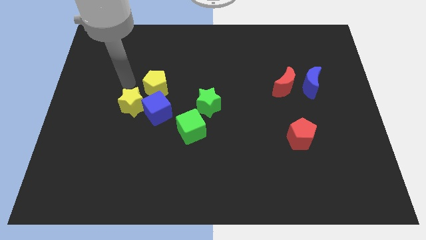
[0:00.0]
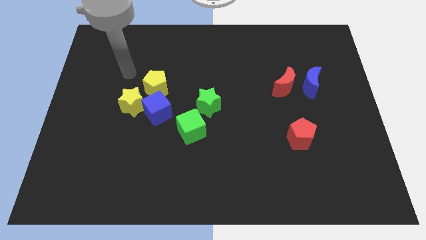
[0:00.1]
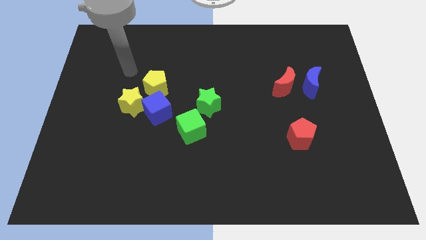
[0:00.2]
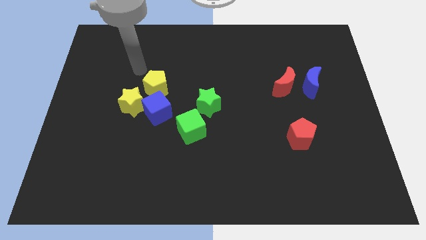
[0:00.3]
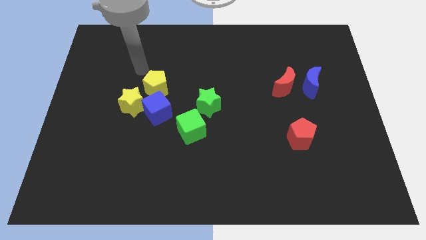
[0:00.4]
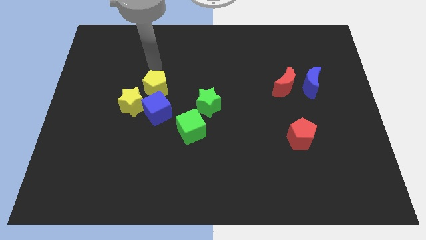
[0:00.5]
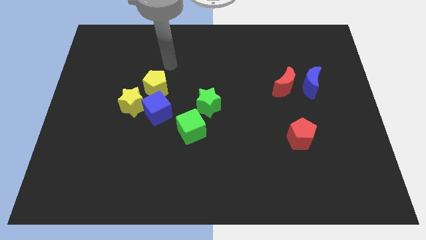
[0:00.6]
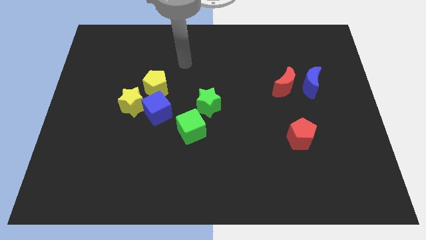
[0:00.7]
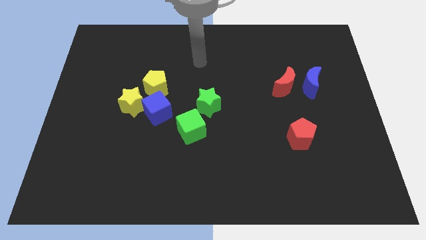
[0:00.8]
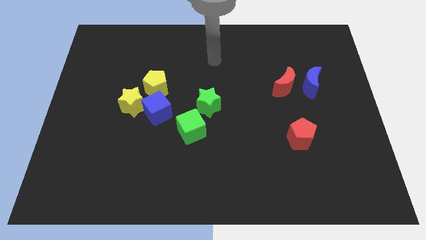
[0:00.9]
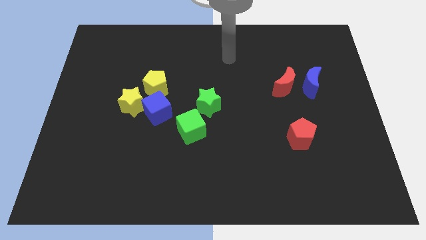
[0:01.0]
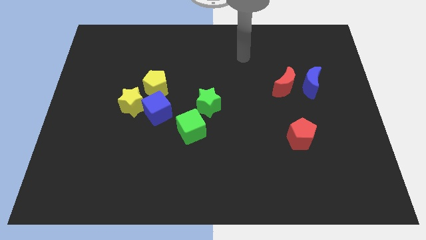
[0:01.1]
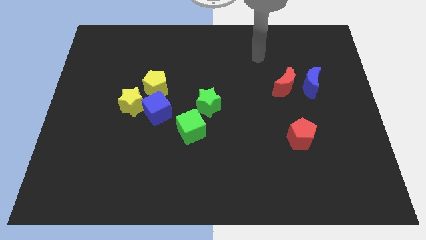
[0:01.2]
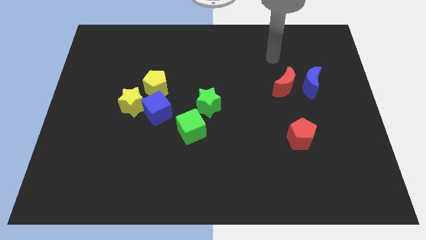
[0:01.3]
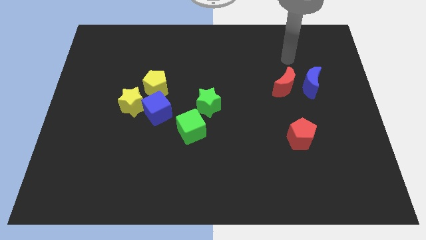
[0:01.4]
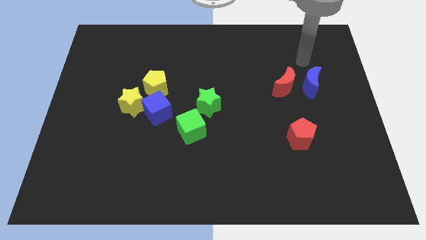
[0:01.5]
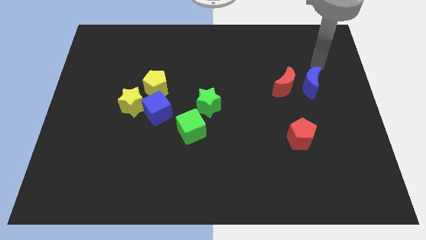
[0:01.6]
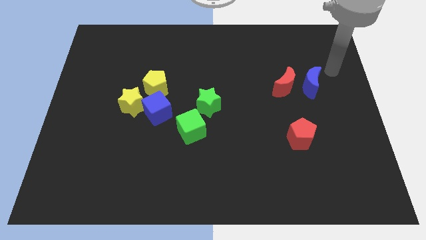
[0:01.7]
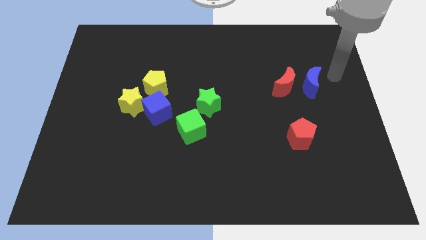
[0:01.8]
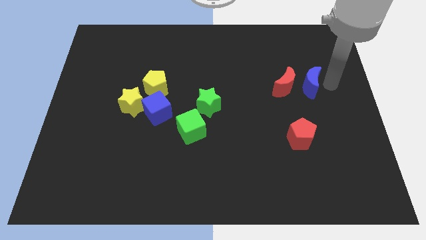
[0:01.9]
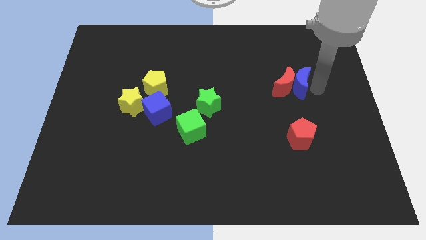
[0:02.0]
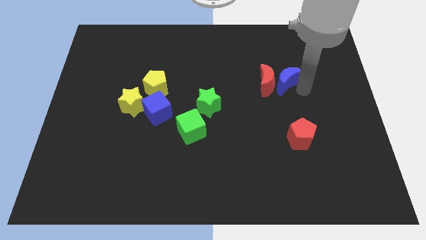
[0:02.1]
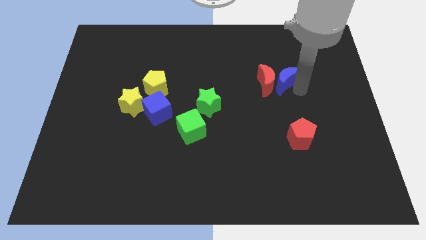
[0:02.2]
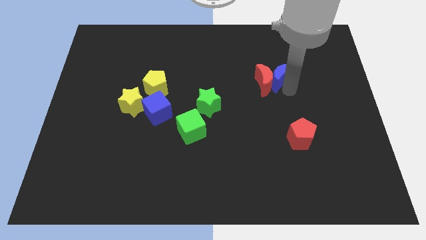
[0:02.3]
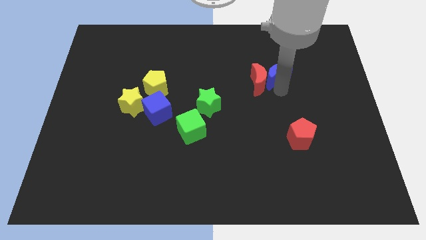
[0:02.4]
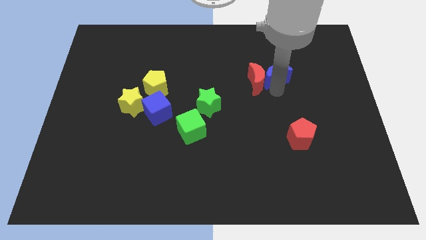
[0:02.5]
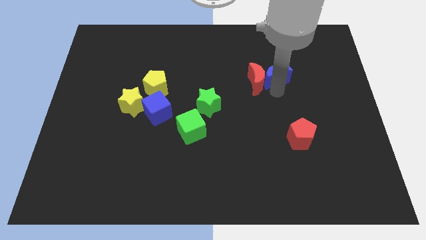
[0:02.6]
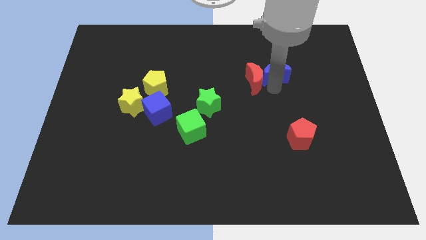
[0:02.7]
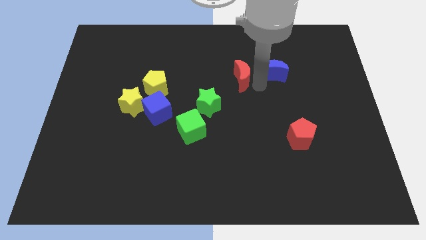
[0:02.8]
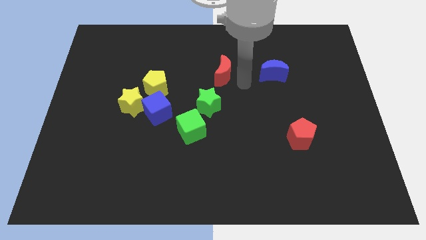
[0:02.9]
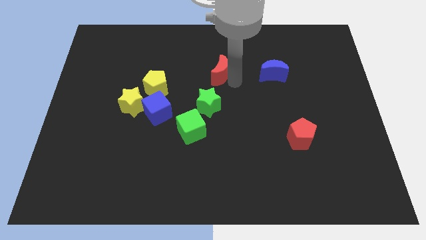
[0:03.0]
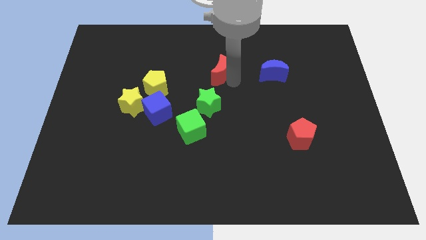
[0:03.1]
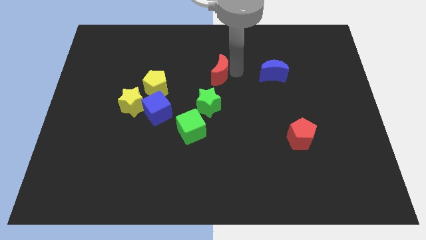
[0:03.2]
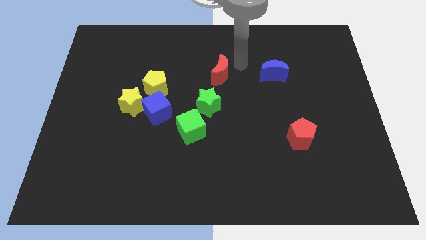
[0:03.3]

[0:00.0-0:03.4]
place the red crescent above the green star

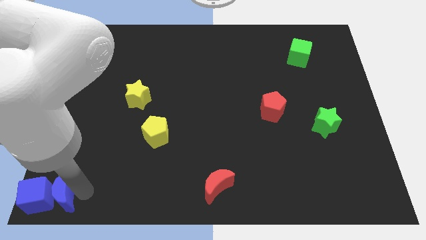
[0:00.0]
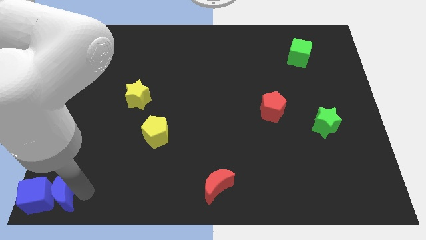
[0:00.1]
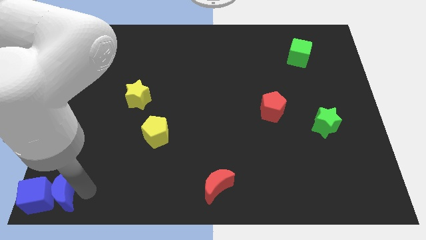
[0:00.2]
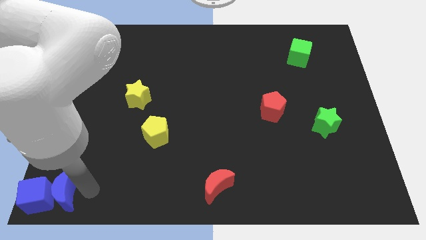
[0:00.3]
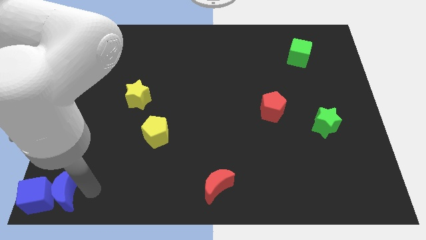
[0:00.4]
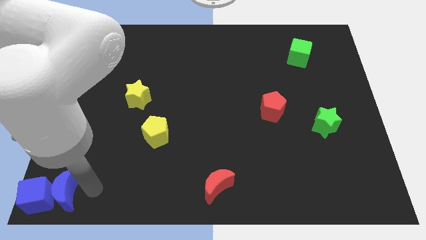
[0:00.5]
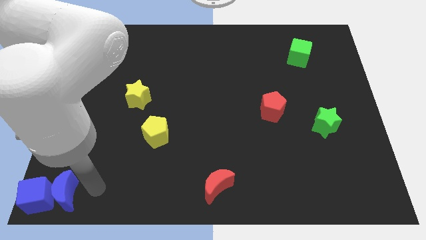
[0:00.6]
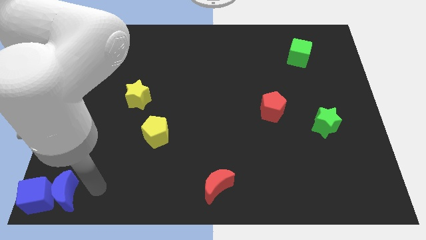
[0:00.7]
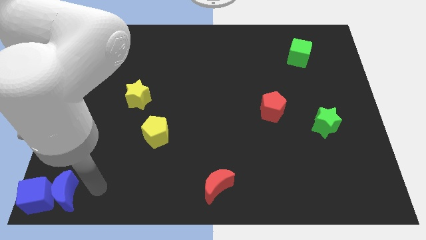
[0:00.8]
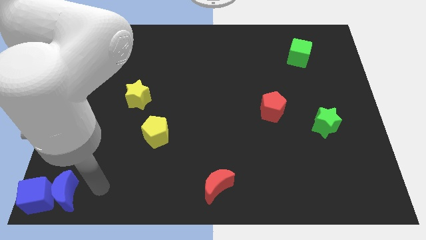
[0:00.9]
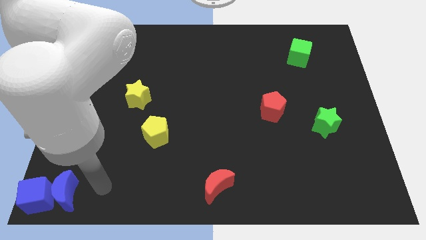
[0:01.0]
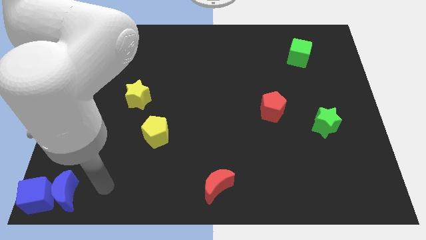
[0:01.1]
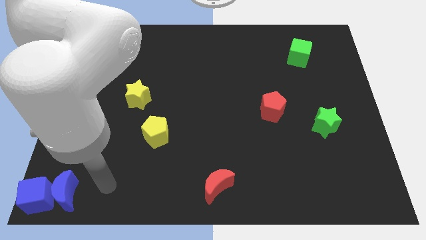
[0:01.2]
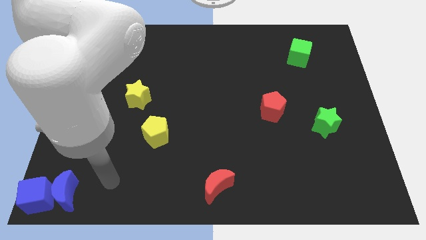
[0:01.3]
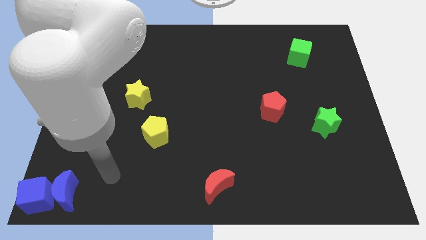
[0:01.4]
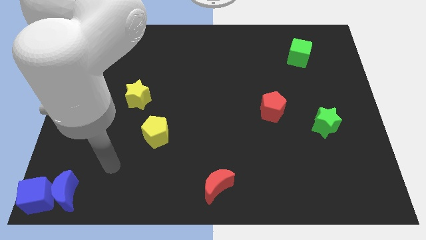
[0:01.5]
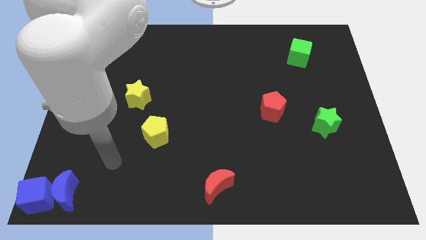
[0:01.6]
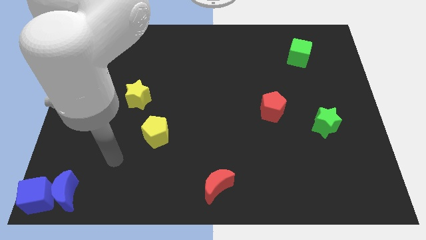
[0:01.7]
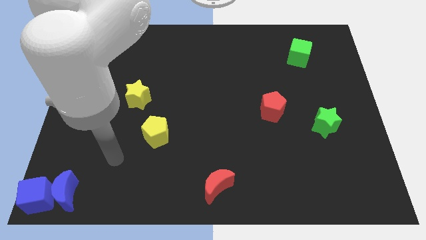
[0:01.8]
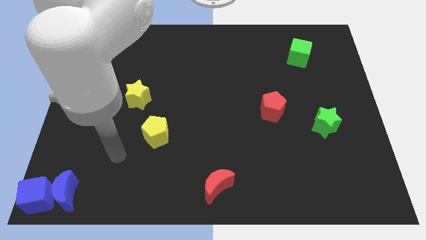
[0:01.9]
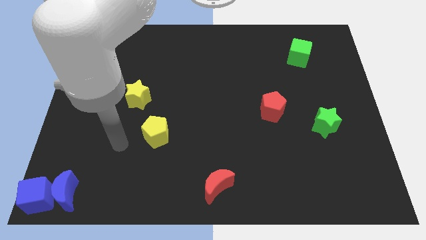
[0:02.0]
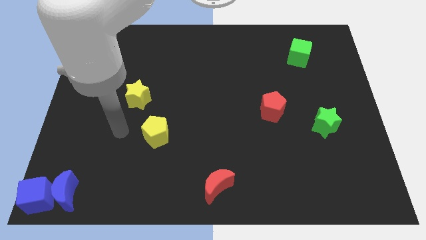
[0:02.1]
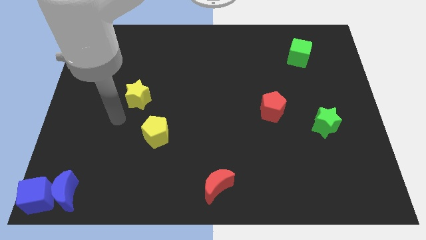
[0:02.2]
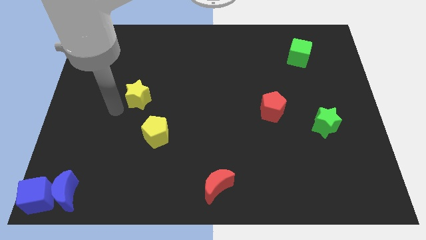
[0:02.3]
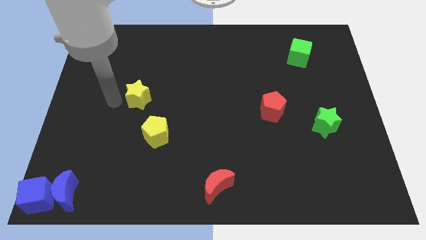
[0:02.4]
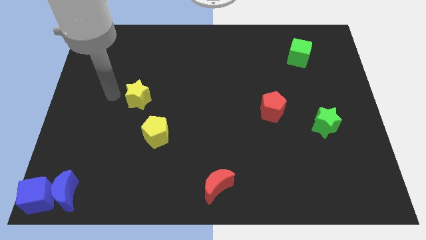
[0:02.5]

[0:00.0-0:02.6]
place the arm to the left of the yellow star

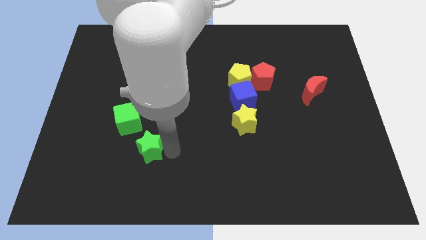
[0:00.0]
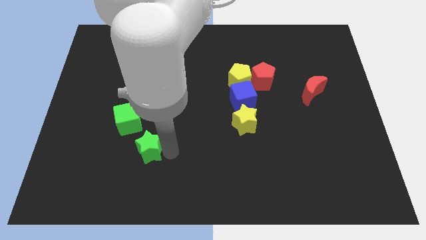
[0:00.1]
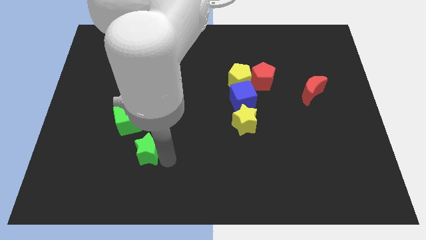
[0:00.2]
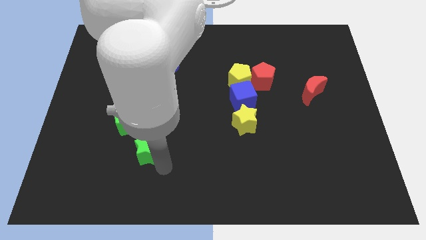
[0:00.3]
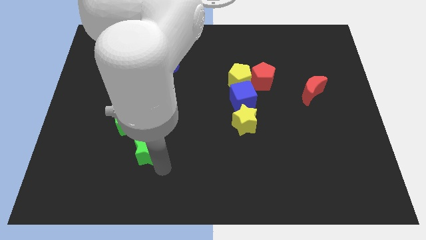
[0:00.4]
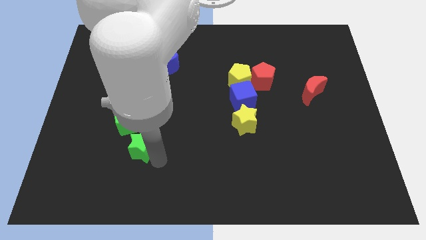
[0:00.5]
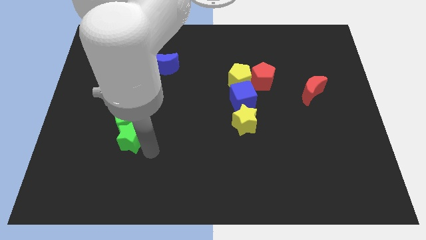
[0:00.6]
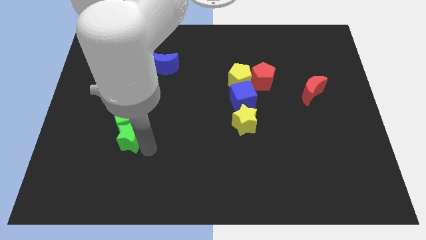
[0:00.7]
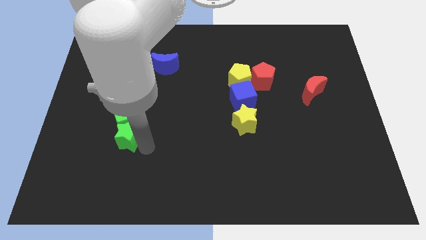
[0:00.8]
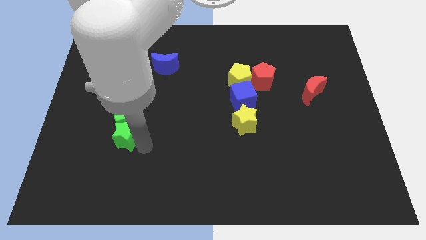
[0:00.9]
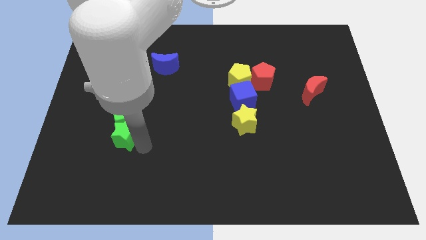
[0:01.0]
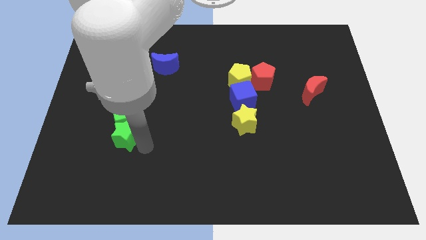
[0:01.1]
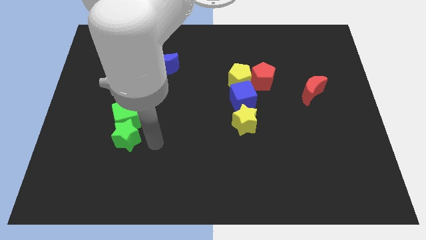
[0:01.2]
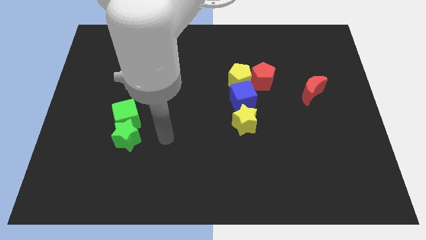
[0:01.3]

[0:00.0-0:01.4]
push the green star into green cube

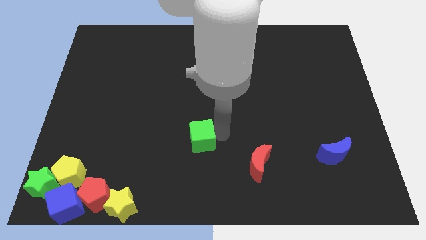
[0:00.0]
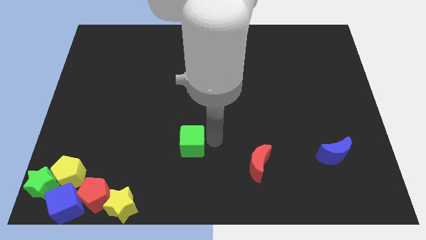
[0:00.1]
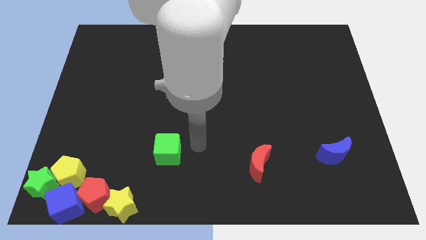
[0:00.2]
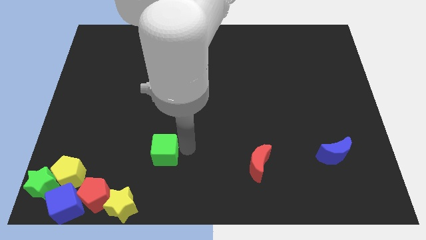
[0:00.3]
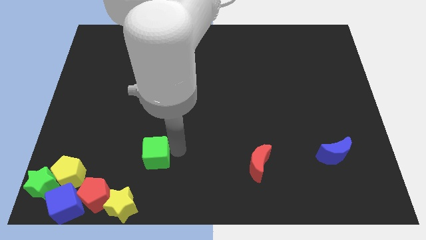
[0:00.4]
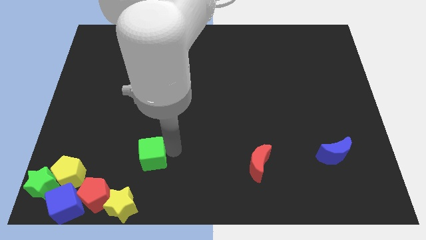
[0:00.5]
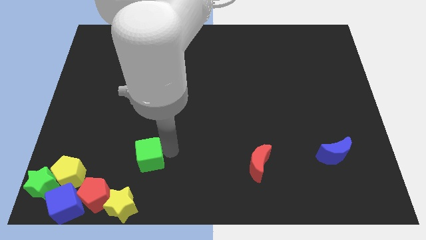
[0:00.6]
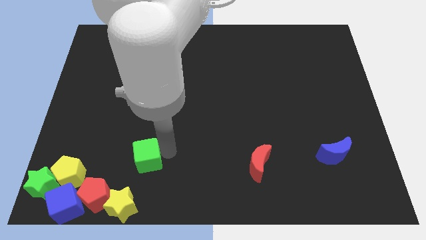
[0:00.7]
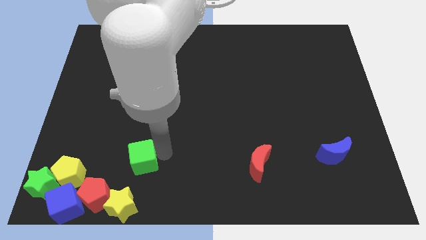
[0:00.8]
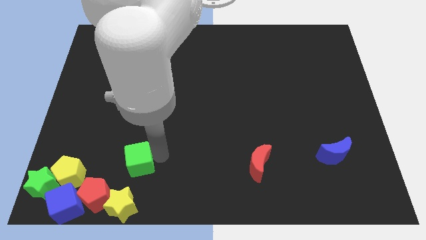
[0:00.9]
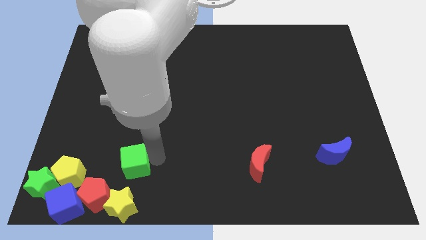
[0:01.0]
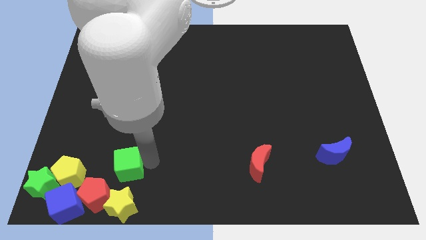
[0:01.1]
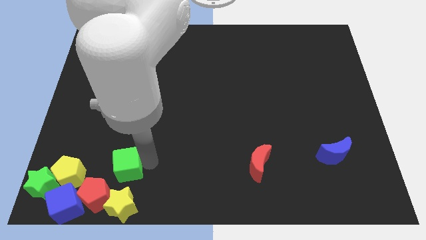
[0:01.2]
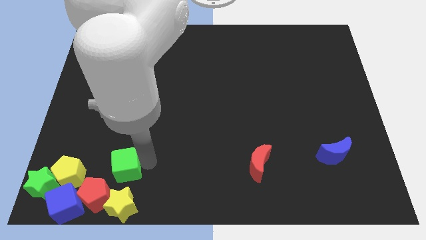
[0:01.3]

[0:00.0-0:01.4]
move the green cube to the top of the yellow star

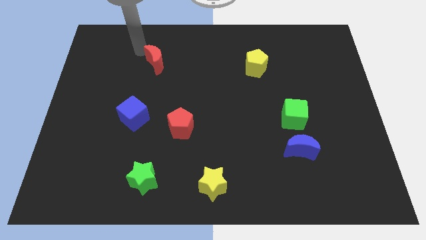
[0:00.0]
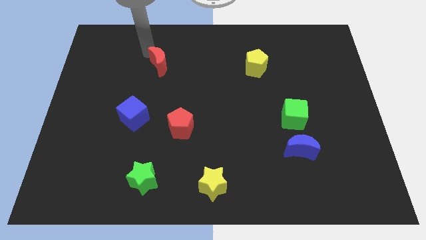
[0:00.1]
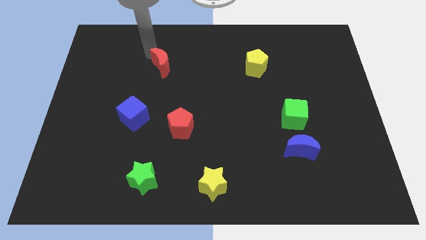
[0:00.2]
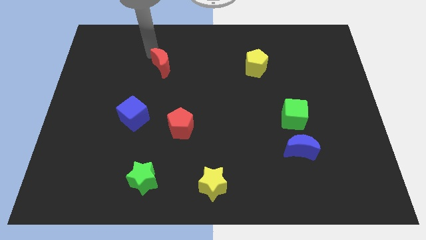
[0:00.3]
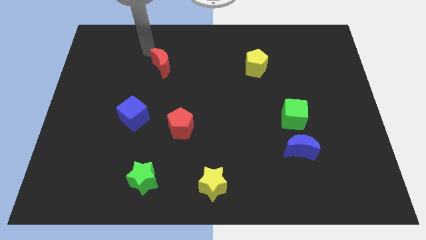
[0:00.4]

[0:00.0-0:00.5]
slightly move the red moon towards
